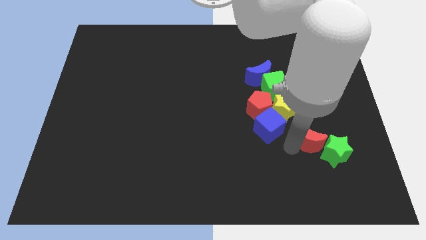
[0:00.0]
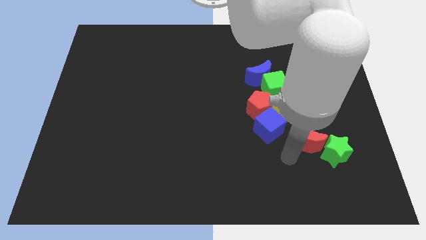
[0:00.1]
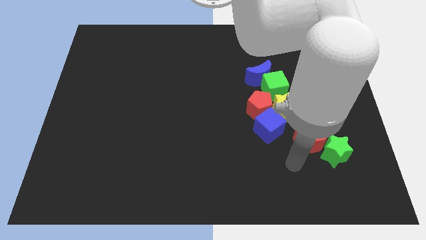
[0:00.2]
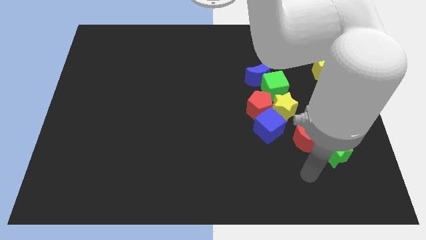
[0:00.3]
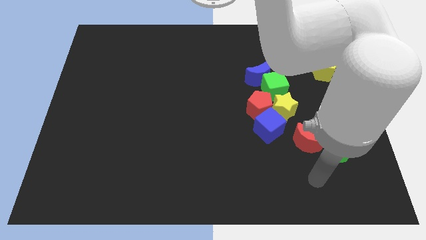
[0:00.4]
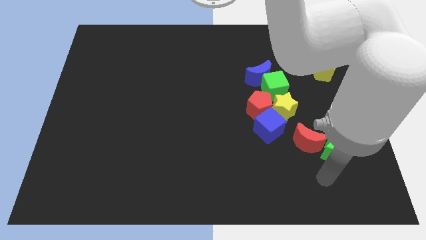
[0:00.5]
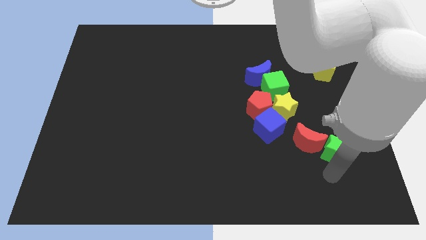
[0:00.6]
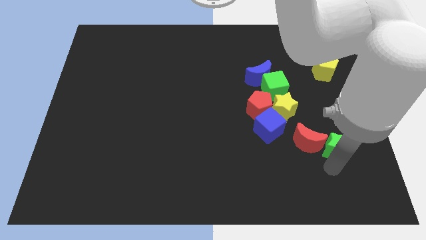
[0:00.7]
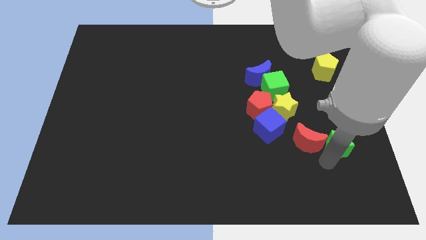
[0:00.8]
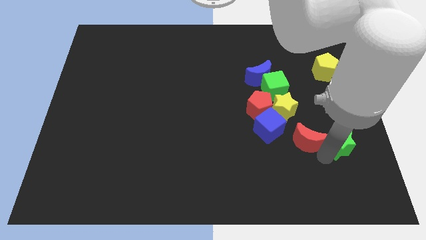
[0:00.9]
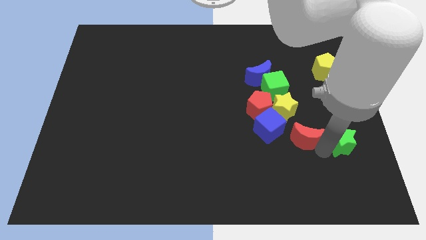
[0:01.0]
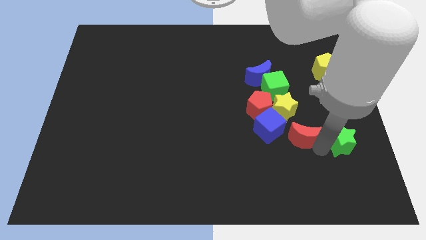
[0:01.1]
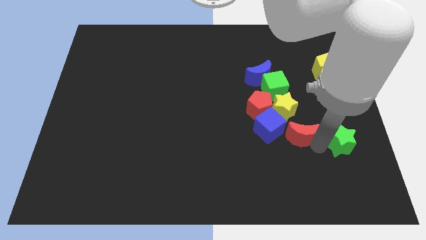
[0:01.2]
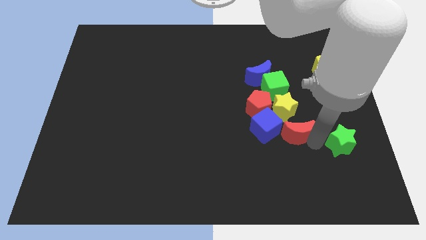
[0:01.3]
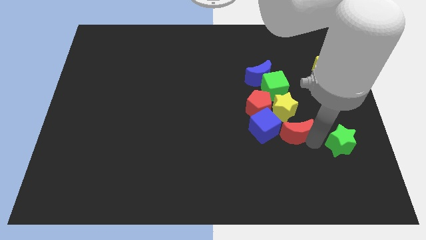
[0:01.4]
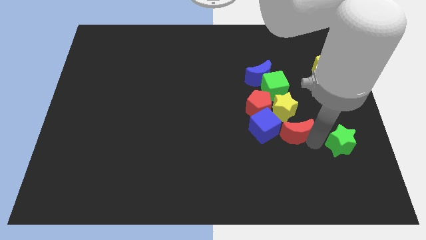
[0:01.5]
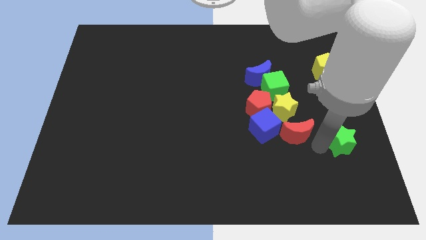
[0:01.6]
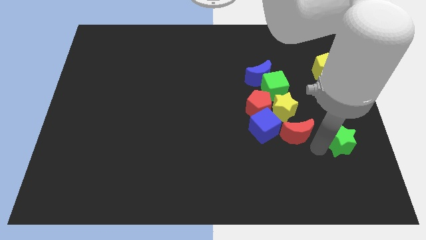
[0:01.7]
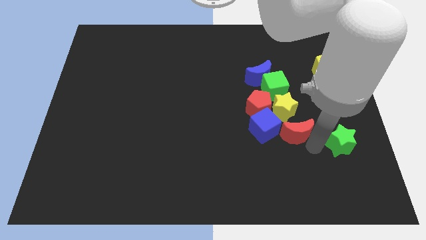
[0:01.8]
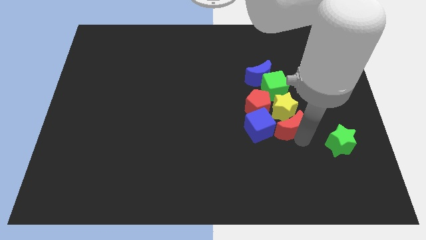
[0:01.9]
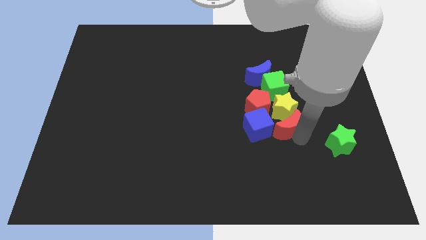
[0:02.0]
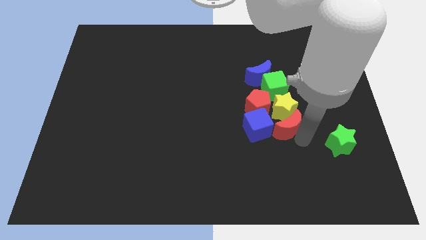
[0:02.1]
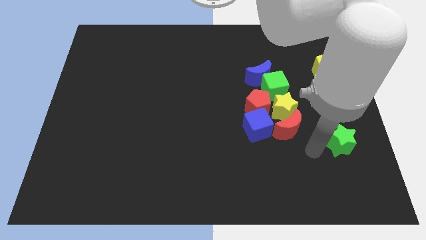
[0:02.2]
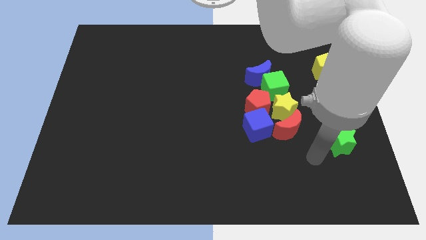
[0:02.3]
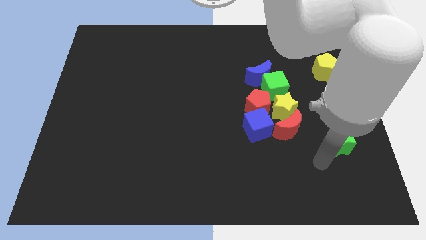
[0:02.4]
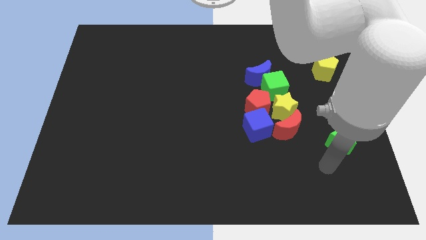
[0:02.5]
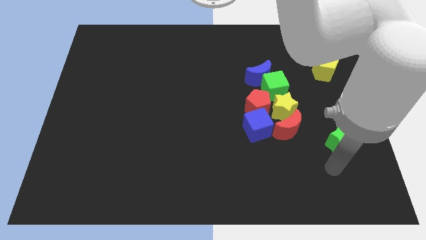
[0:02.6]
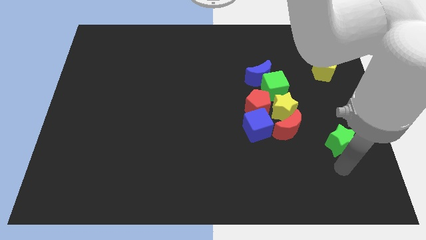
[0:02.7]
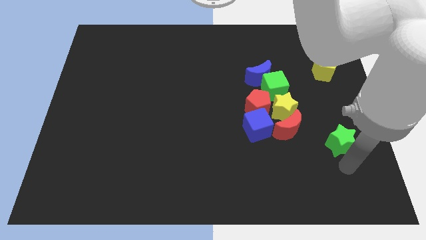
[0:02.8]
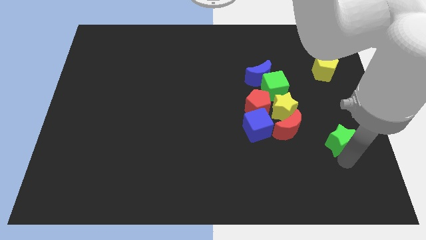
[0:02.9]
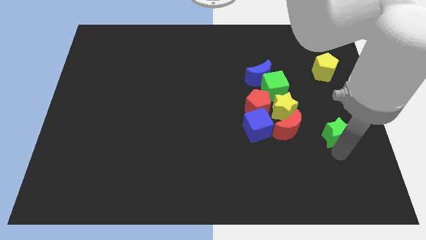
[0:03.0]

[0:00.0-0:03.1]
put the red moon vertically below the yellow star

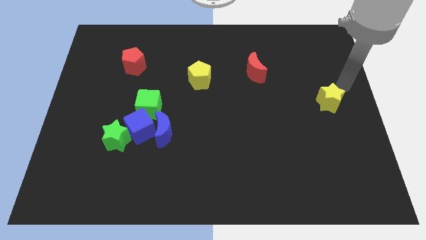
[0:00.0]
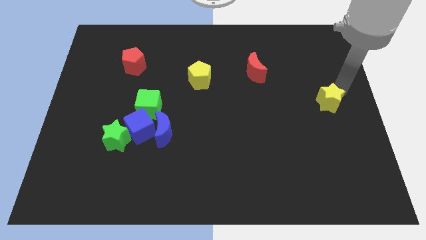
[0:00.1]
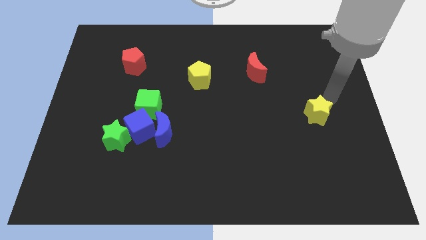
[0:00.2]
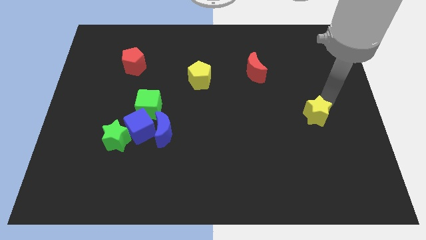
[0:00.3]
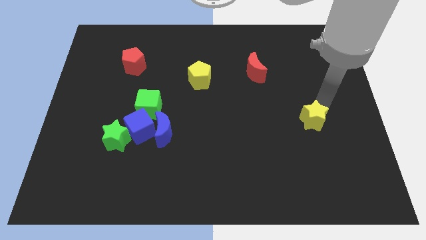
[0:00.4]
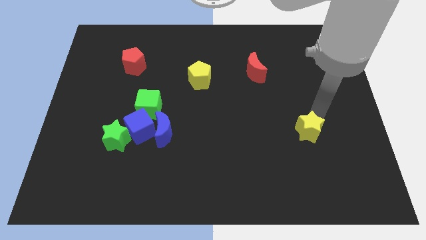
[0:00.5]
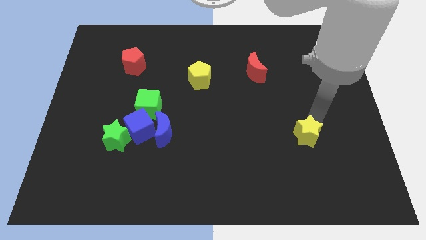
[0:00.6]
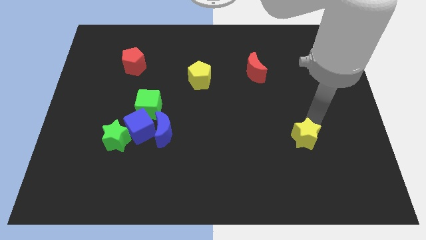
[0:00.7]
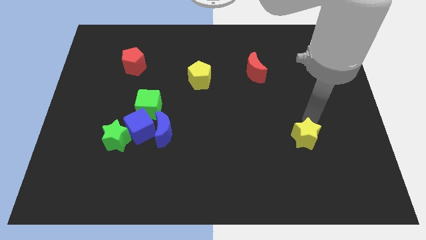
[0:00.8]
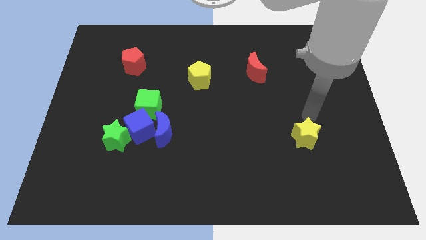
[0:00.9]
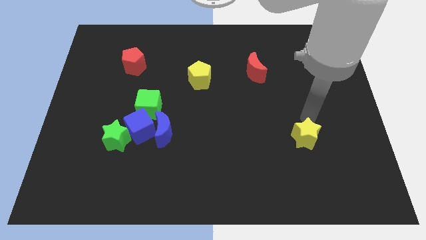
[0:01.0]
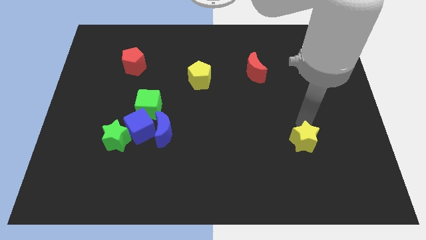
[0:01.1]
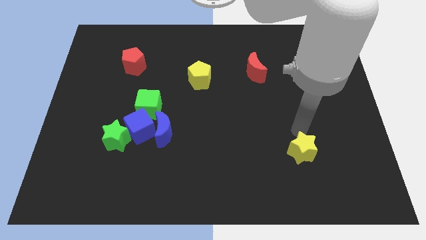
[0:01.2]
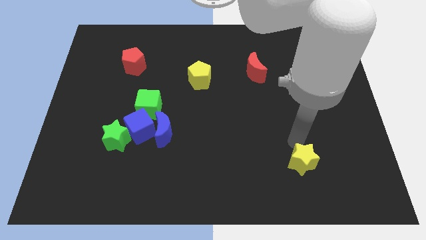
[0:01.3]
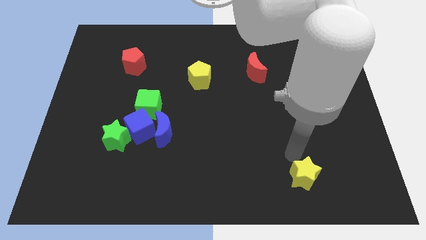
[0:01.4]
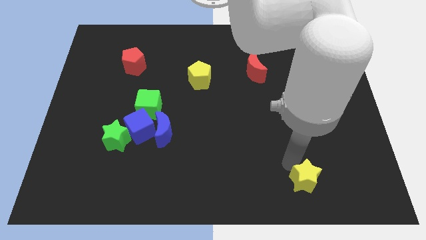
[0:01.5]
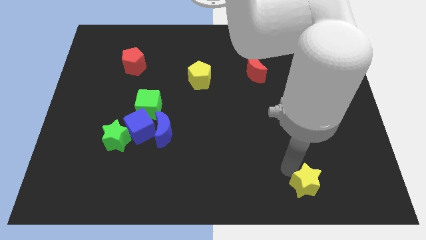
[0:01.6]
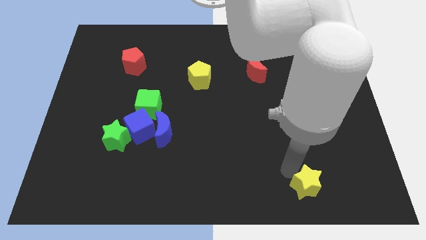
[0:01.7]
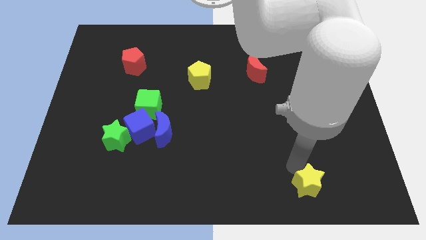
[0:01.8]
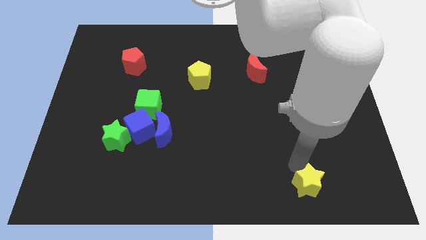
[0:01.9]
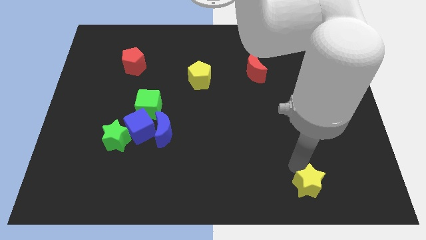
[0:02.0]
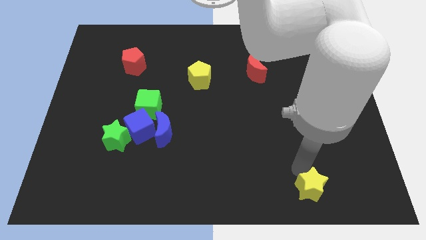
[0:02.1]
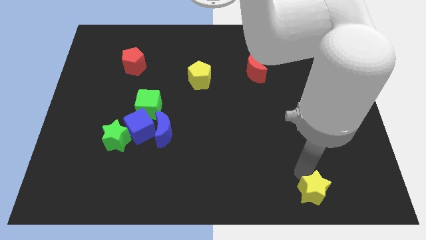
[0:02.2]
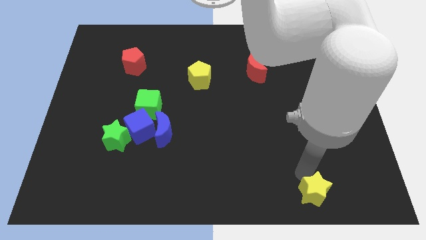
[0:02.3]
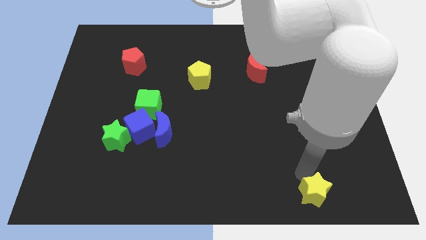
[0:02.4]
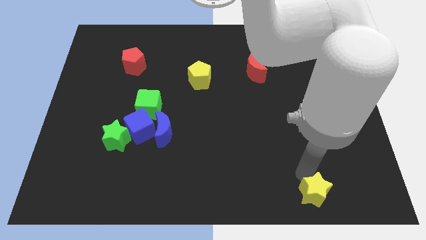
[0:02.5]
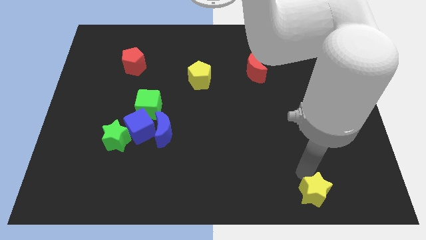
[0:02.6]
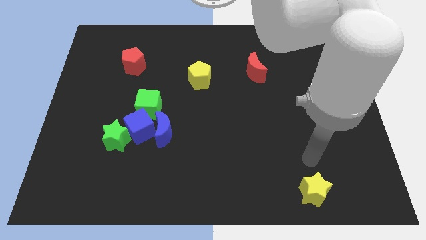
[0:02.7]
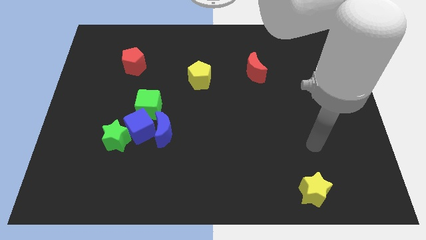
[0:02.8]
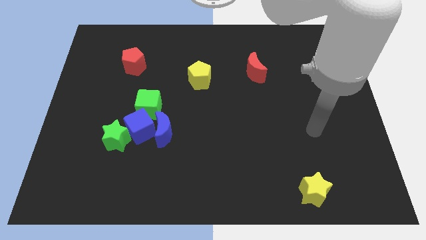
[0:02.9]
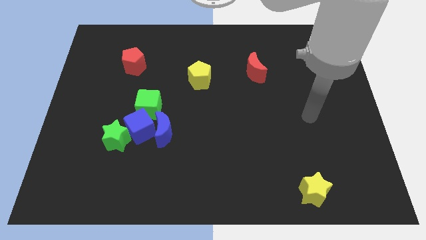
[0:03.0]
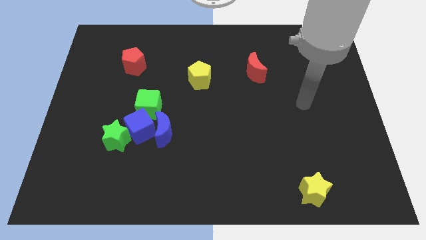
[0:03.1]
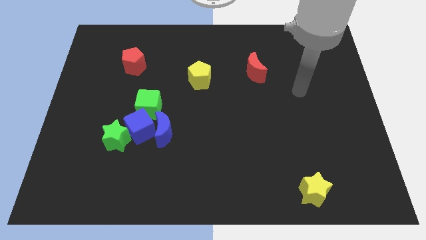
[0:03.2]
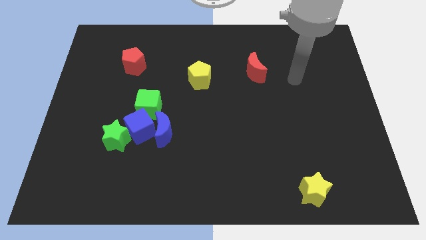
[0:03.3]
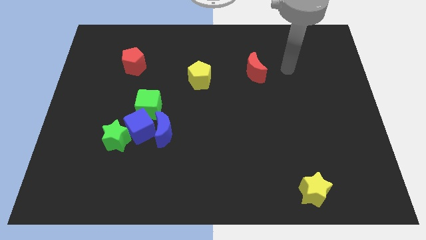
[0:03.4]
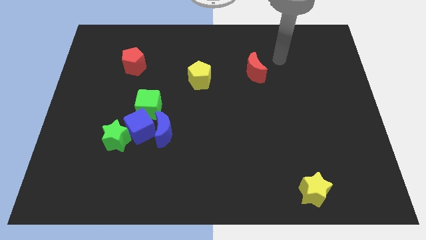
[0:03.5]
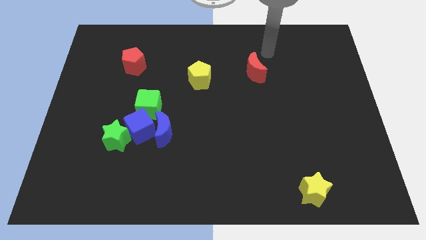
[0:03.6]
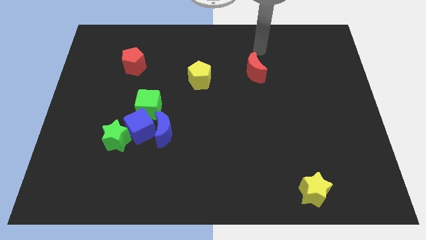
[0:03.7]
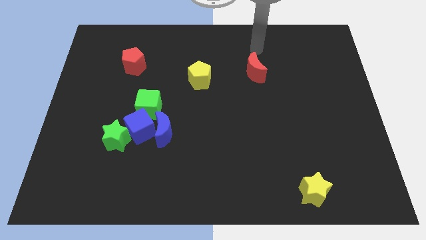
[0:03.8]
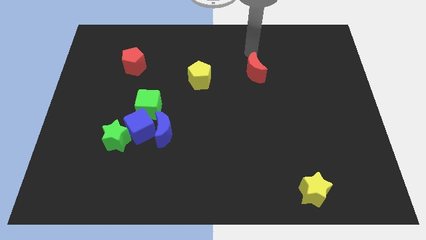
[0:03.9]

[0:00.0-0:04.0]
move yellow star to the bottom of the board

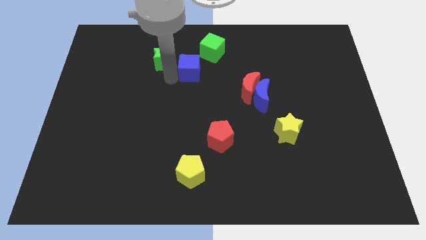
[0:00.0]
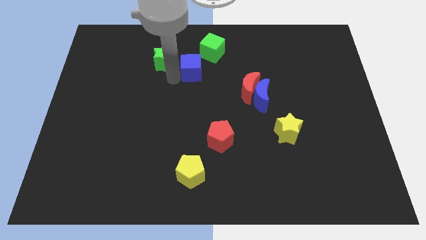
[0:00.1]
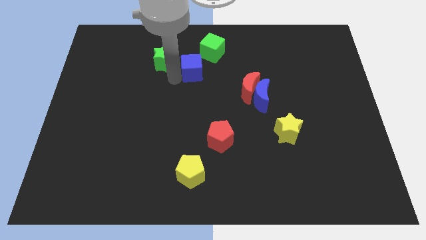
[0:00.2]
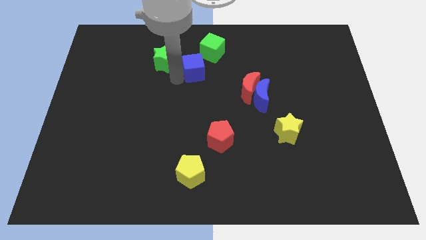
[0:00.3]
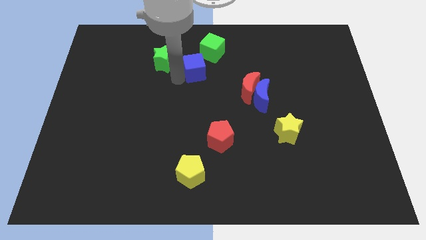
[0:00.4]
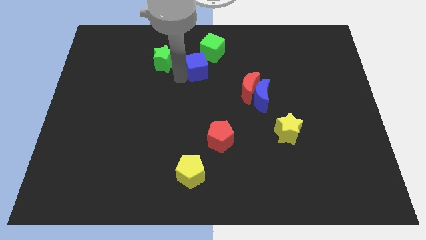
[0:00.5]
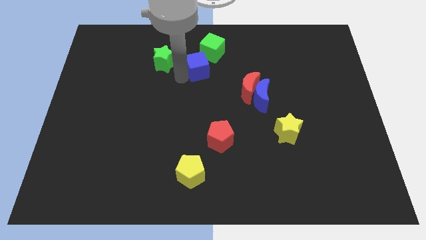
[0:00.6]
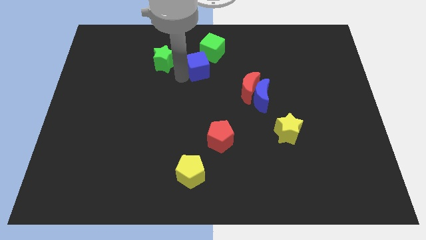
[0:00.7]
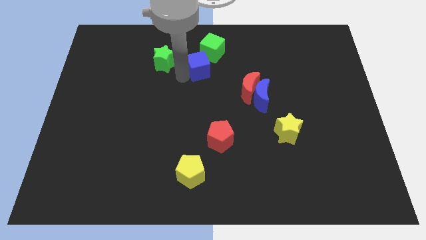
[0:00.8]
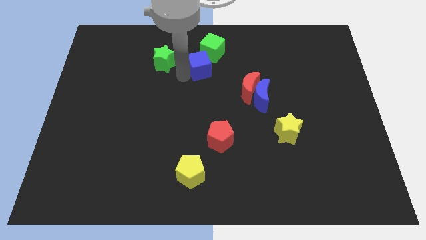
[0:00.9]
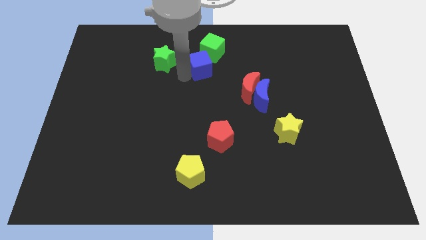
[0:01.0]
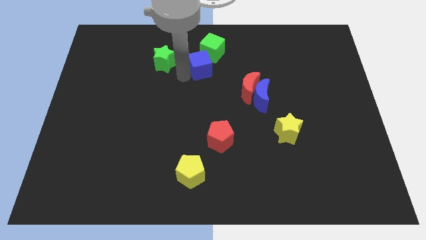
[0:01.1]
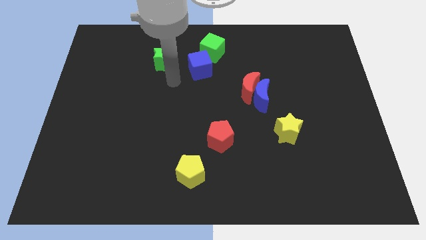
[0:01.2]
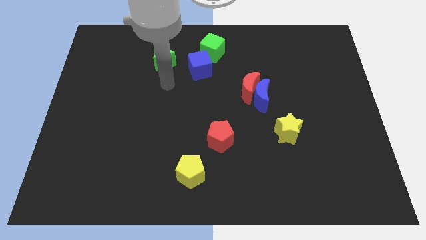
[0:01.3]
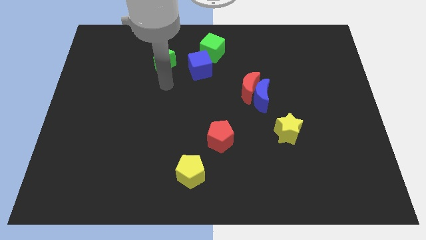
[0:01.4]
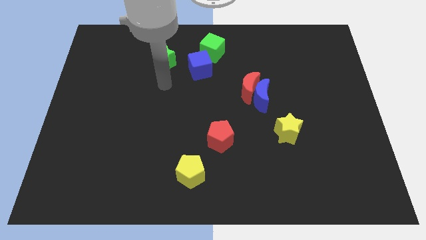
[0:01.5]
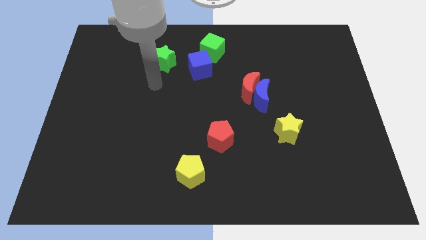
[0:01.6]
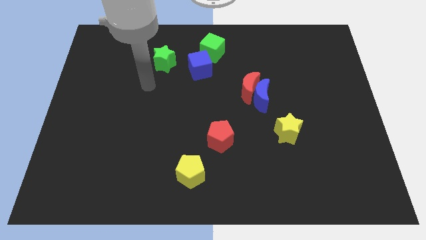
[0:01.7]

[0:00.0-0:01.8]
move blue cube to the bottom of green cube

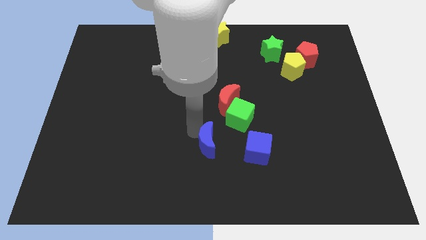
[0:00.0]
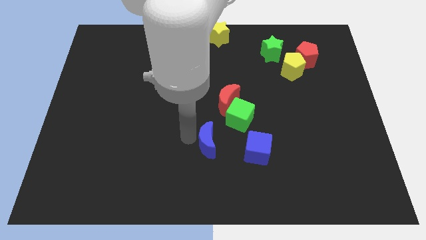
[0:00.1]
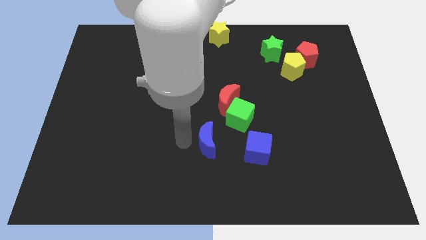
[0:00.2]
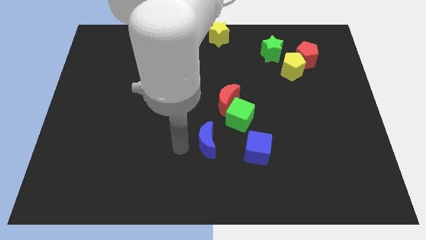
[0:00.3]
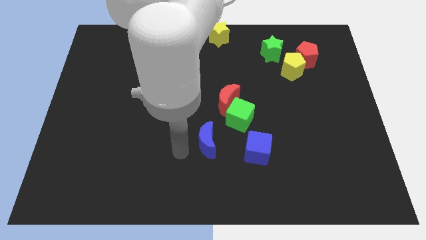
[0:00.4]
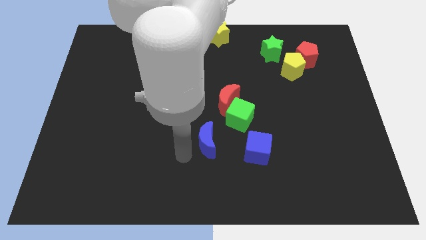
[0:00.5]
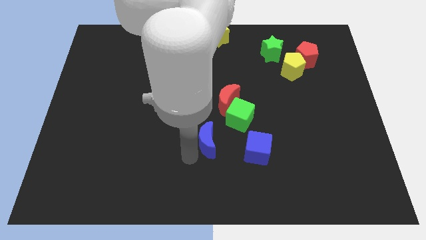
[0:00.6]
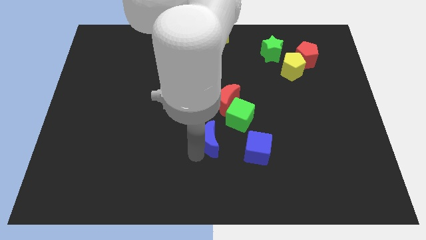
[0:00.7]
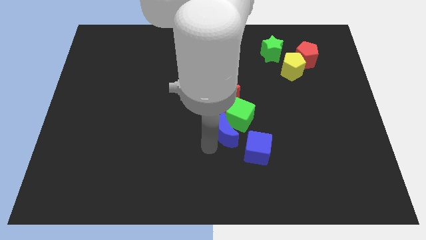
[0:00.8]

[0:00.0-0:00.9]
move the blue crescent close to the green cube
